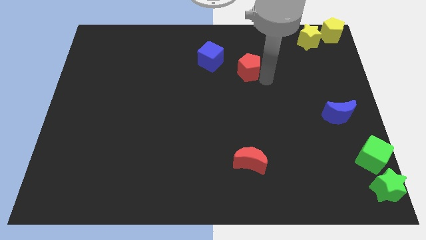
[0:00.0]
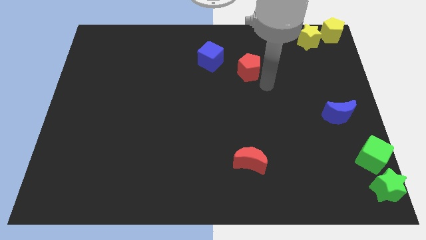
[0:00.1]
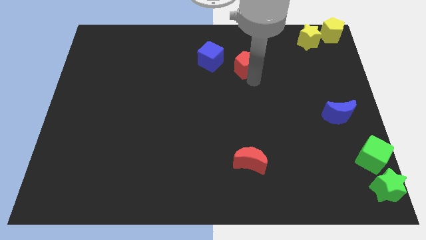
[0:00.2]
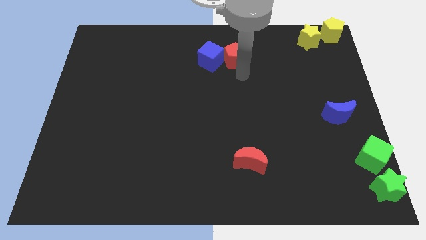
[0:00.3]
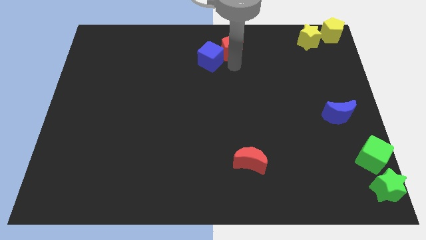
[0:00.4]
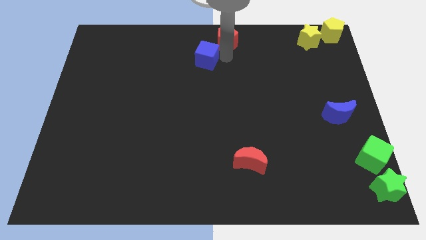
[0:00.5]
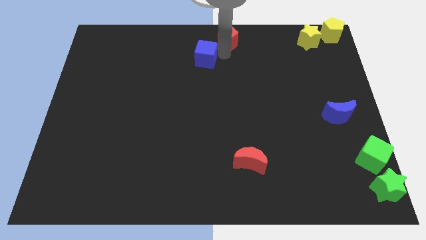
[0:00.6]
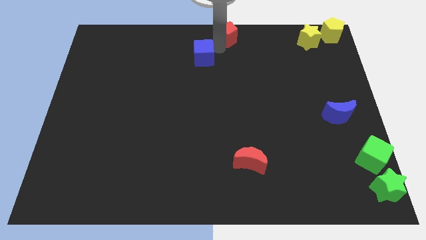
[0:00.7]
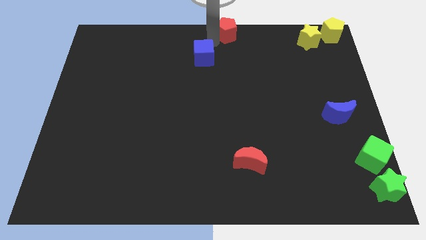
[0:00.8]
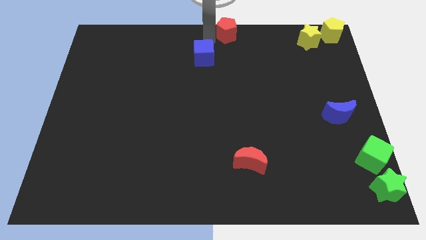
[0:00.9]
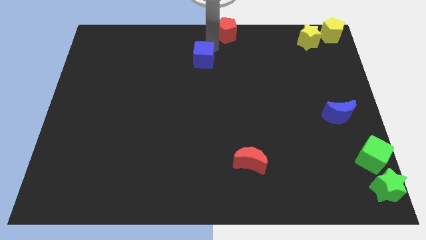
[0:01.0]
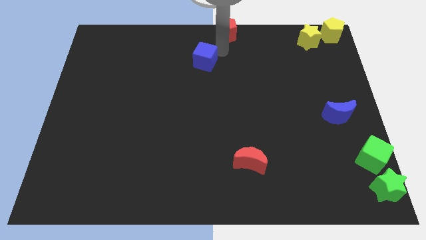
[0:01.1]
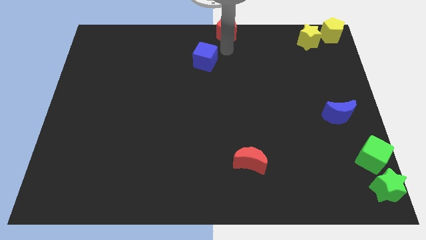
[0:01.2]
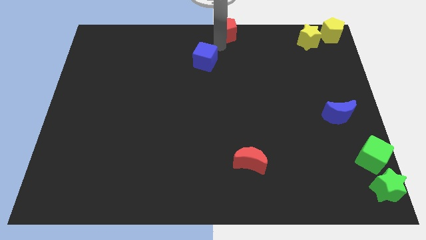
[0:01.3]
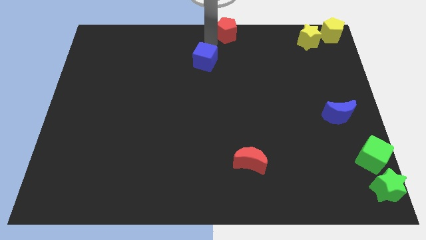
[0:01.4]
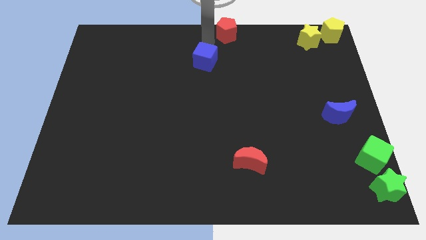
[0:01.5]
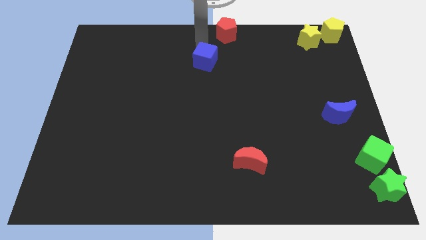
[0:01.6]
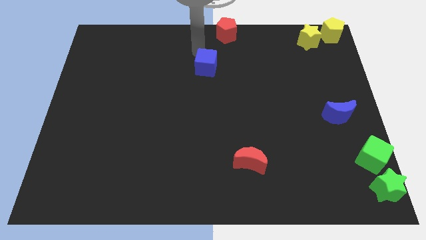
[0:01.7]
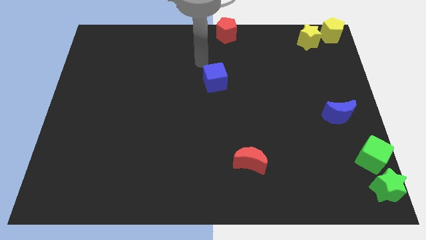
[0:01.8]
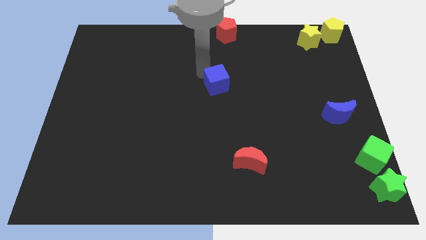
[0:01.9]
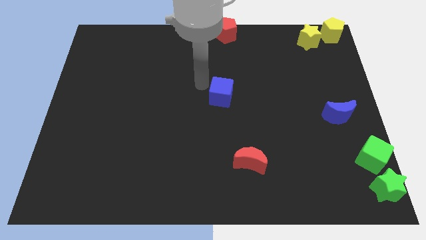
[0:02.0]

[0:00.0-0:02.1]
move the blue cube towards the center

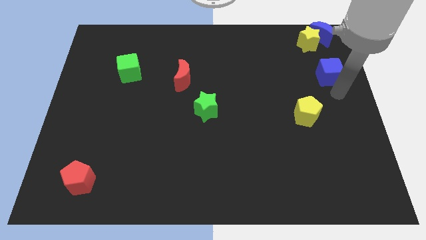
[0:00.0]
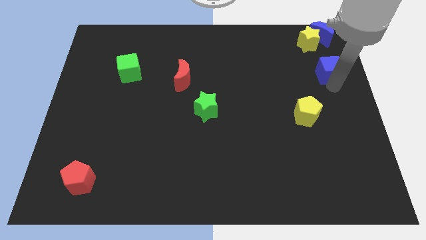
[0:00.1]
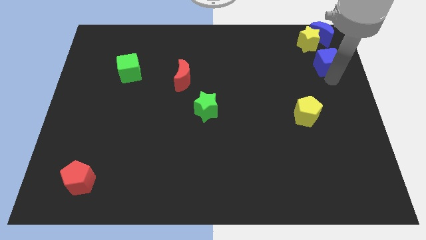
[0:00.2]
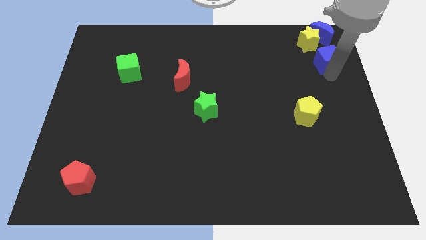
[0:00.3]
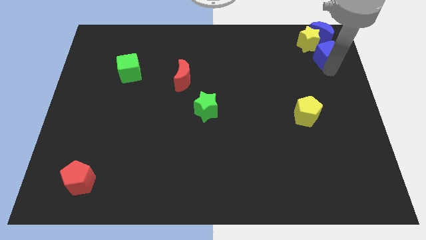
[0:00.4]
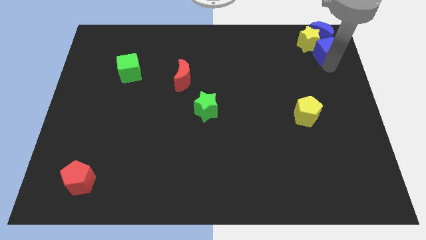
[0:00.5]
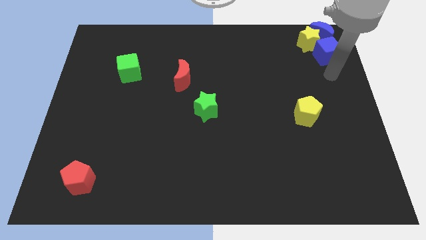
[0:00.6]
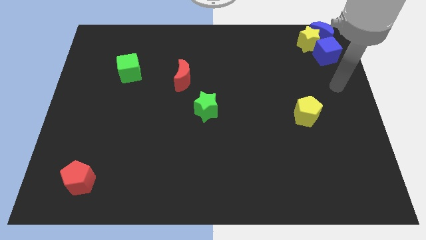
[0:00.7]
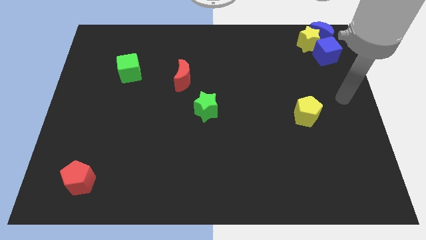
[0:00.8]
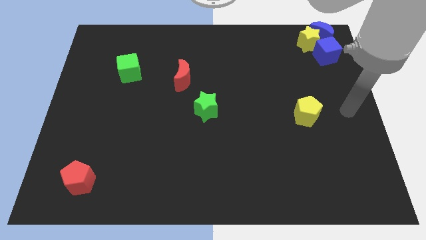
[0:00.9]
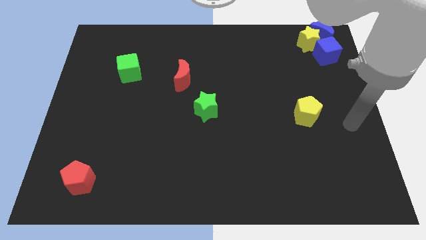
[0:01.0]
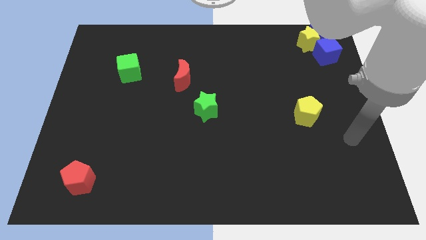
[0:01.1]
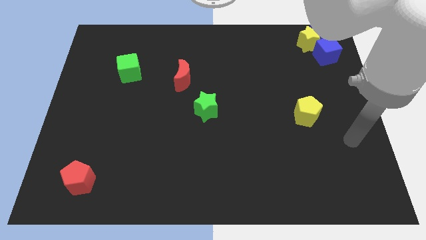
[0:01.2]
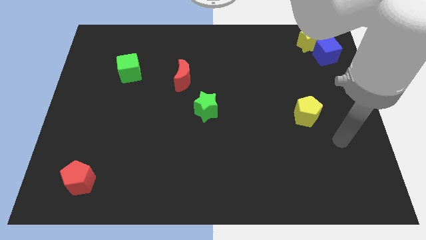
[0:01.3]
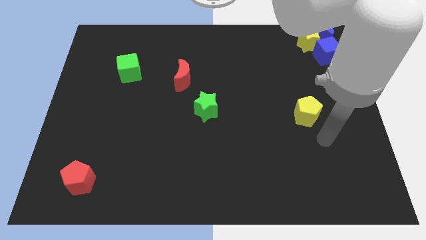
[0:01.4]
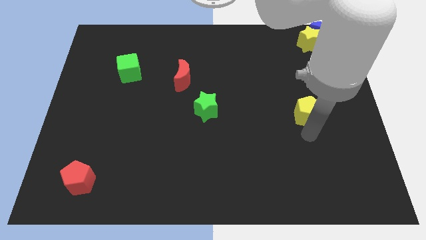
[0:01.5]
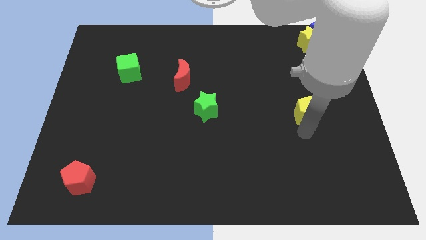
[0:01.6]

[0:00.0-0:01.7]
place blue cube into yellow star and blue moon

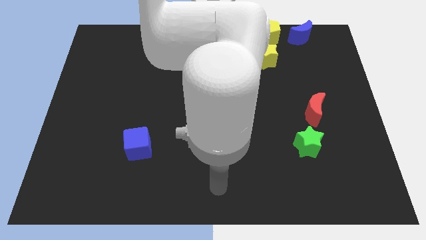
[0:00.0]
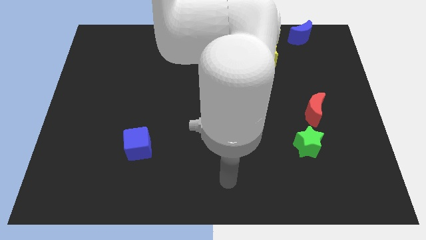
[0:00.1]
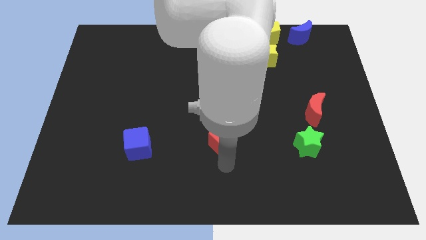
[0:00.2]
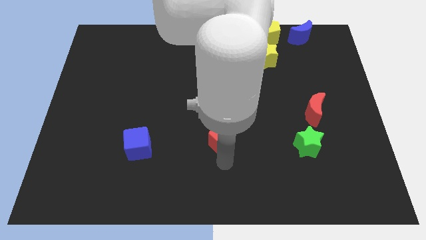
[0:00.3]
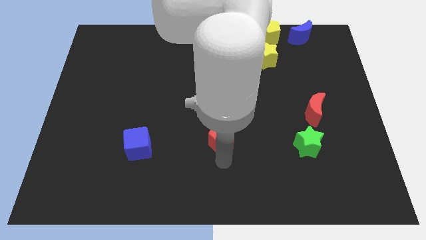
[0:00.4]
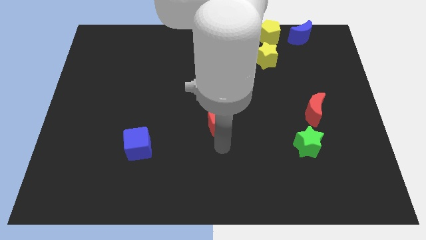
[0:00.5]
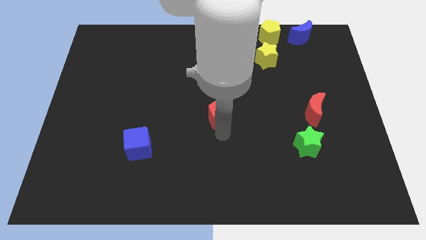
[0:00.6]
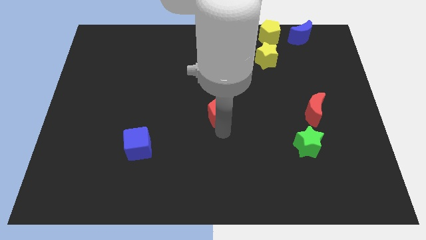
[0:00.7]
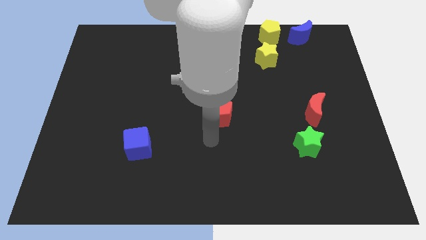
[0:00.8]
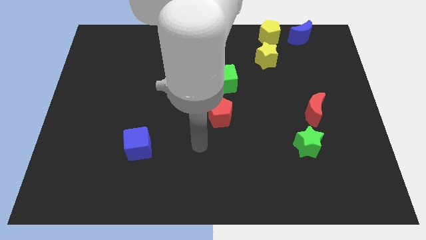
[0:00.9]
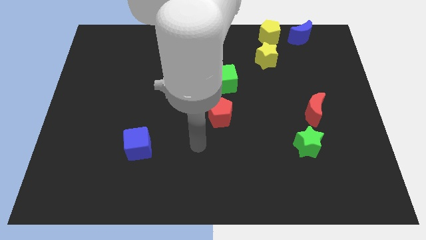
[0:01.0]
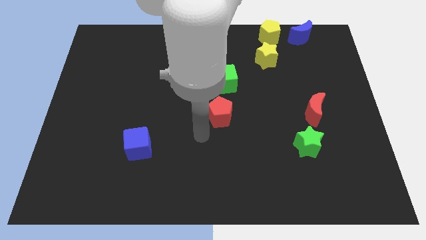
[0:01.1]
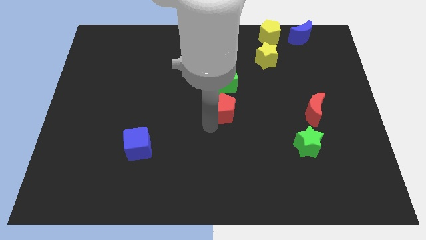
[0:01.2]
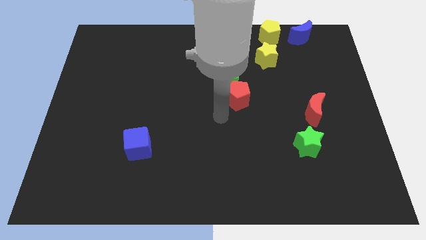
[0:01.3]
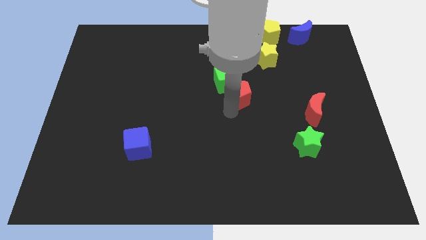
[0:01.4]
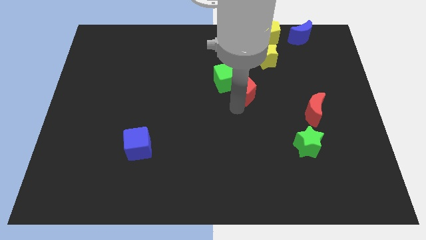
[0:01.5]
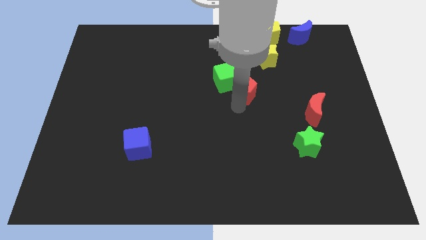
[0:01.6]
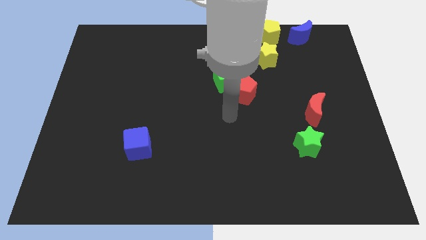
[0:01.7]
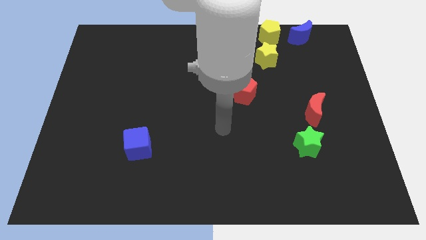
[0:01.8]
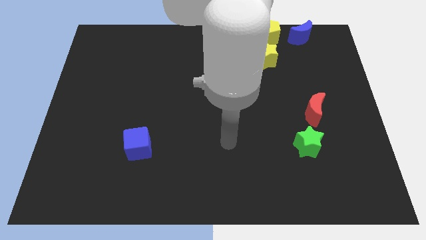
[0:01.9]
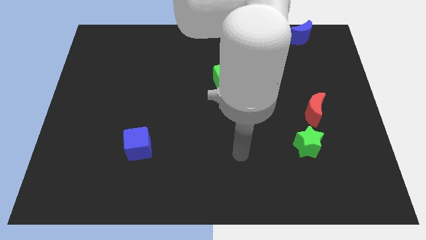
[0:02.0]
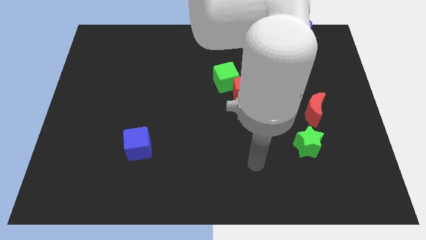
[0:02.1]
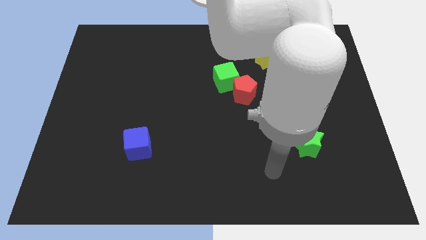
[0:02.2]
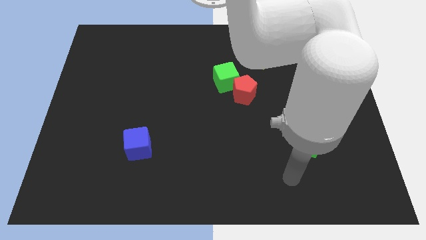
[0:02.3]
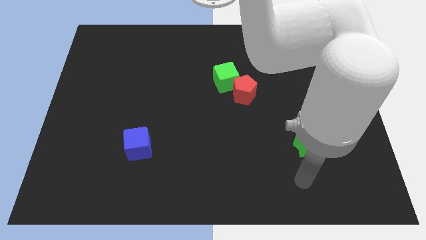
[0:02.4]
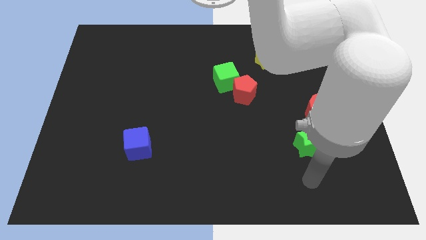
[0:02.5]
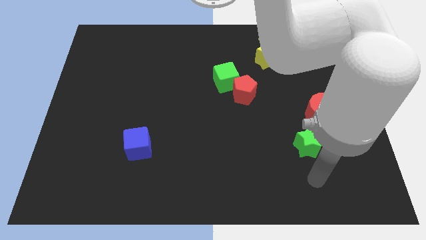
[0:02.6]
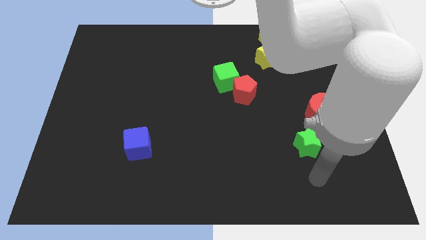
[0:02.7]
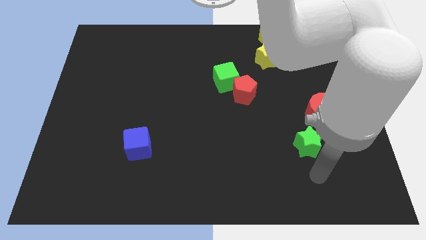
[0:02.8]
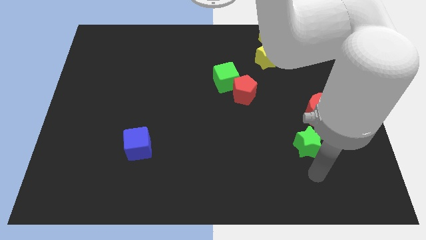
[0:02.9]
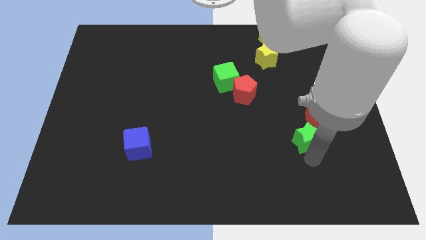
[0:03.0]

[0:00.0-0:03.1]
push the red pentagon into the green cube

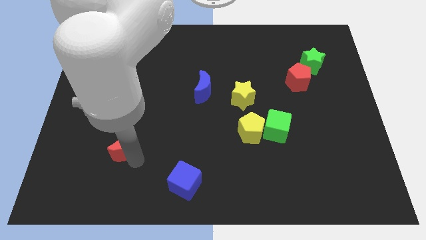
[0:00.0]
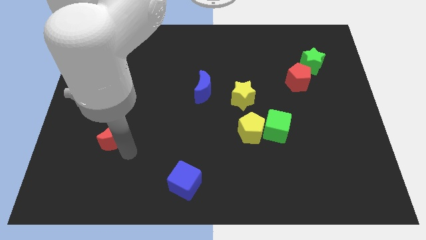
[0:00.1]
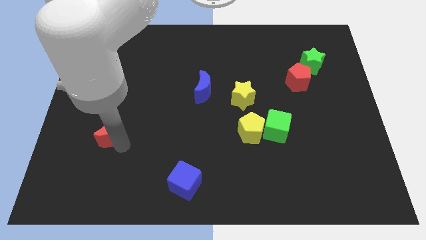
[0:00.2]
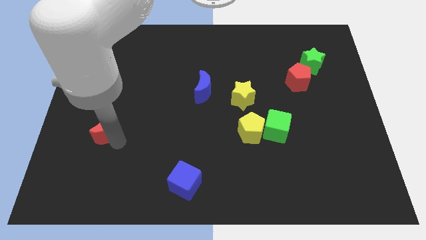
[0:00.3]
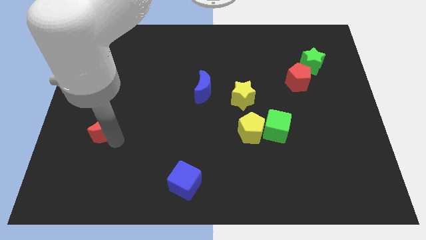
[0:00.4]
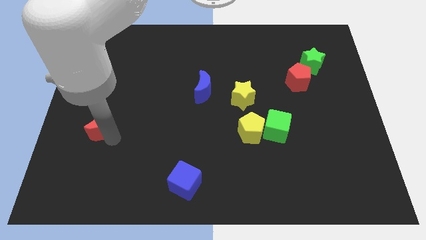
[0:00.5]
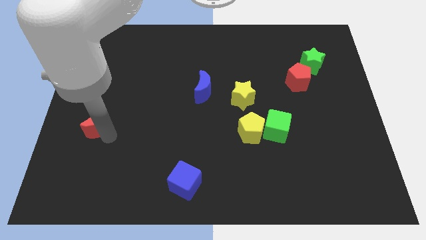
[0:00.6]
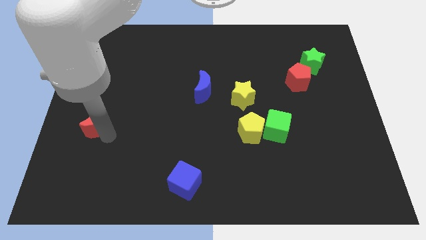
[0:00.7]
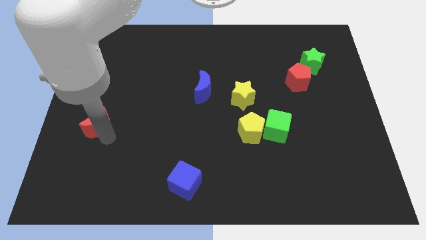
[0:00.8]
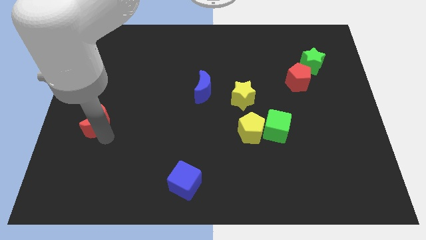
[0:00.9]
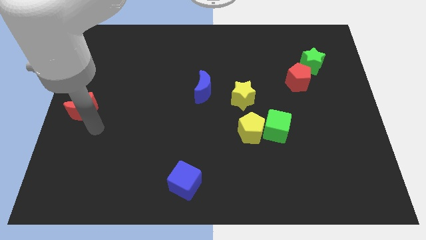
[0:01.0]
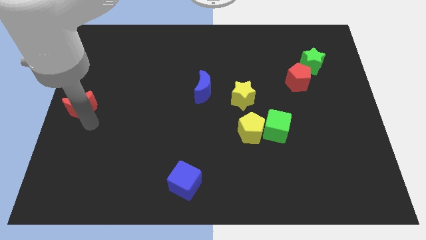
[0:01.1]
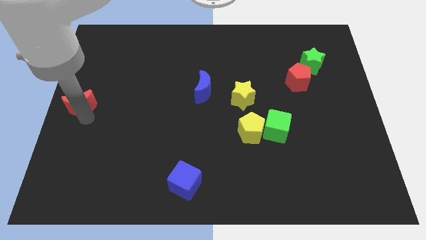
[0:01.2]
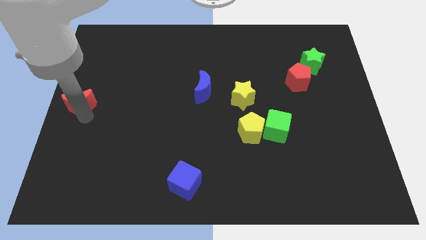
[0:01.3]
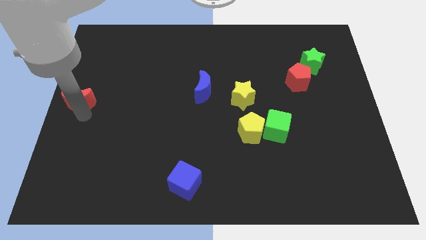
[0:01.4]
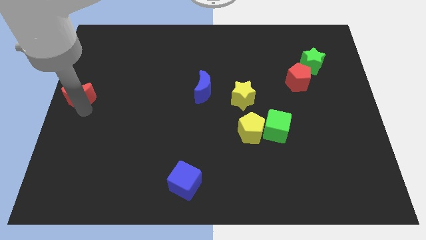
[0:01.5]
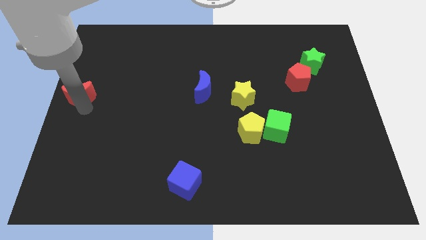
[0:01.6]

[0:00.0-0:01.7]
push the red crescent to the center left of the board

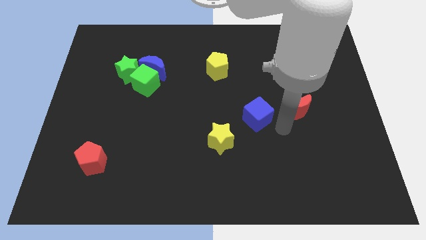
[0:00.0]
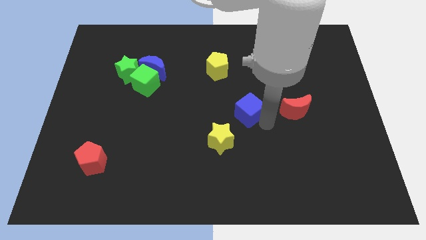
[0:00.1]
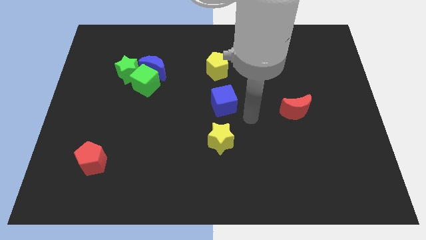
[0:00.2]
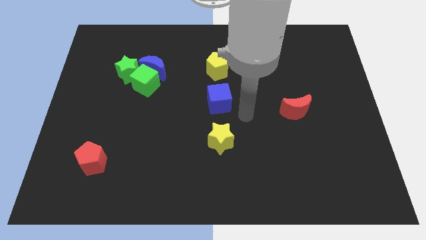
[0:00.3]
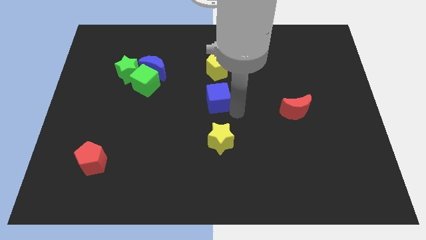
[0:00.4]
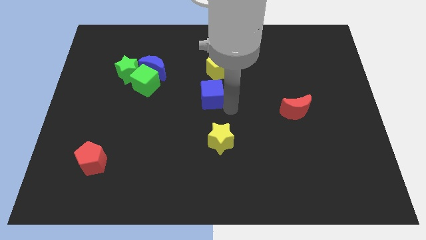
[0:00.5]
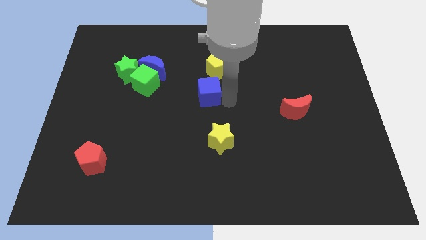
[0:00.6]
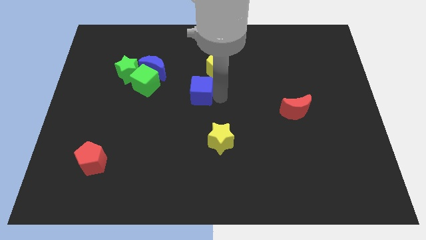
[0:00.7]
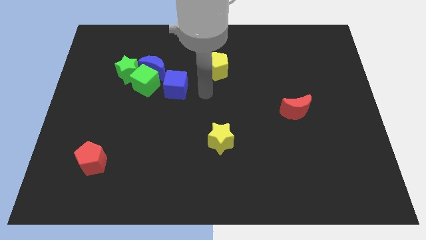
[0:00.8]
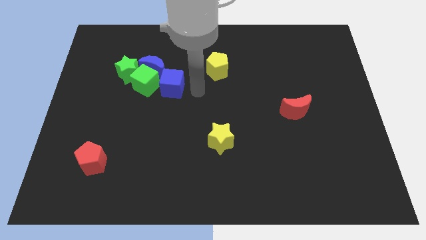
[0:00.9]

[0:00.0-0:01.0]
place the blue cube right to the green cube
